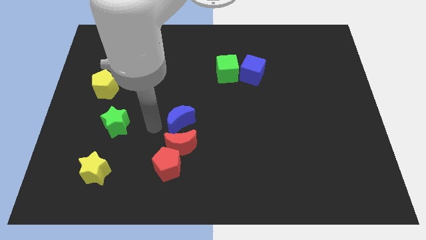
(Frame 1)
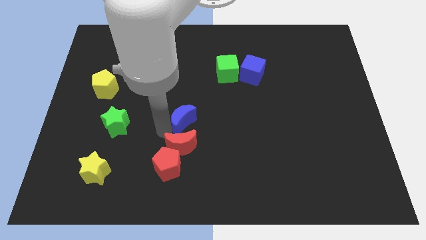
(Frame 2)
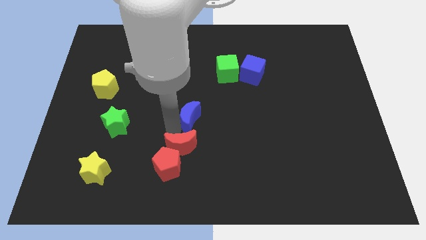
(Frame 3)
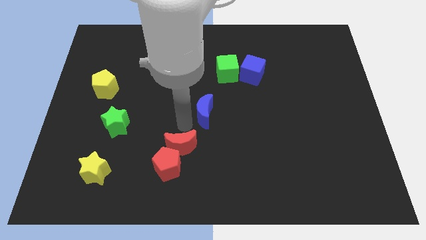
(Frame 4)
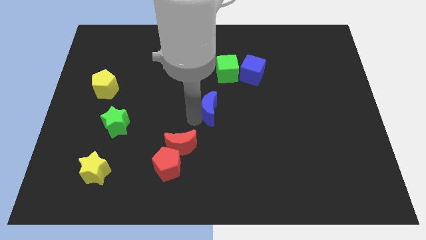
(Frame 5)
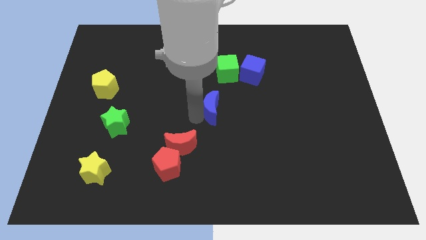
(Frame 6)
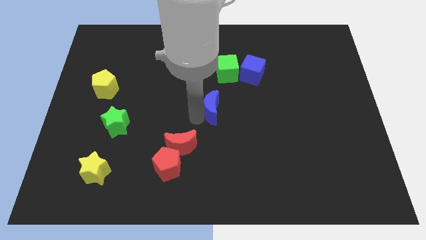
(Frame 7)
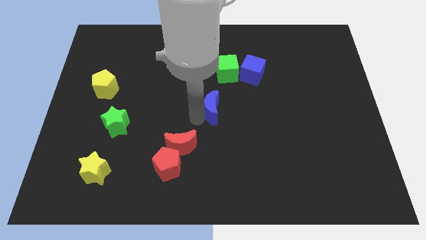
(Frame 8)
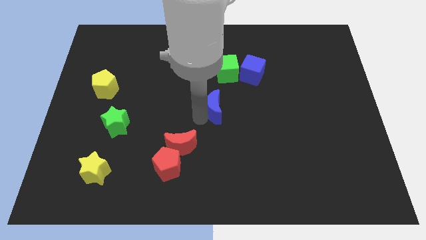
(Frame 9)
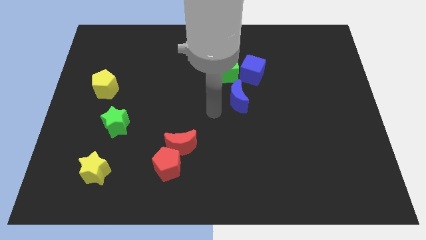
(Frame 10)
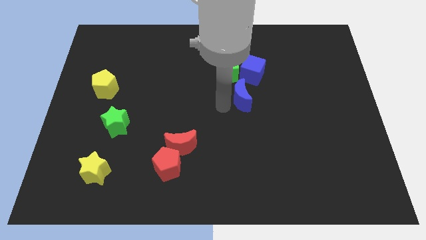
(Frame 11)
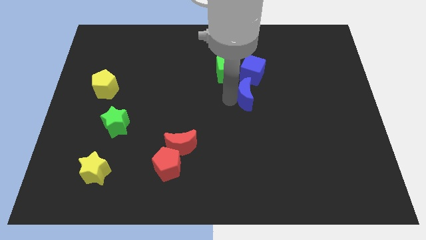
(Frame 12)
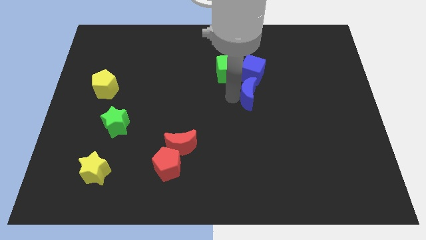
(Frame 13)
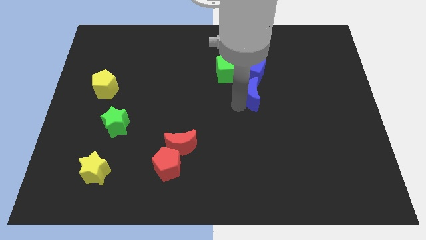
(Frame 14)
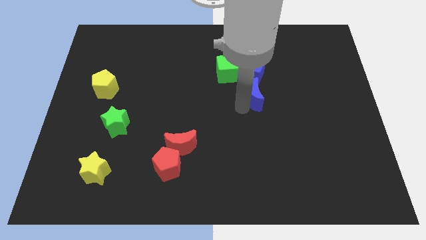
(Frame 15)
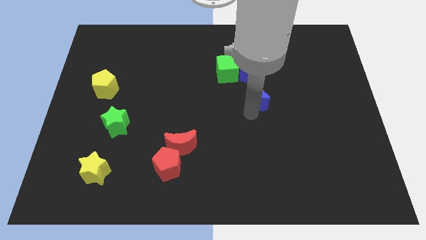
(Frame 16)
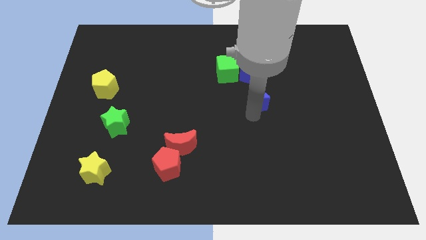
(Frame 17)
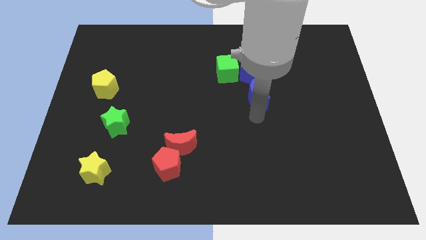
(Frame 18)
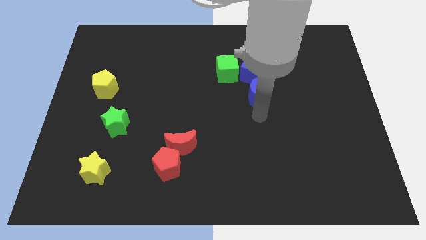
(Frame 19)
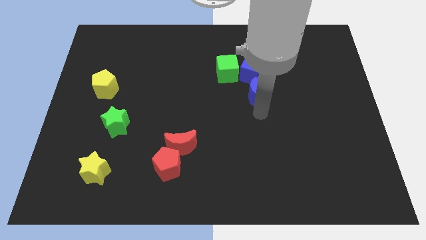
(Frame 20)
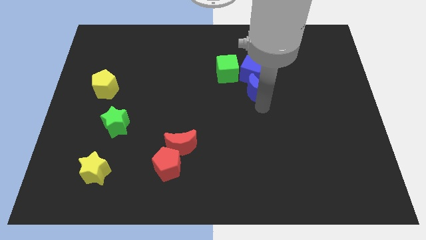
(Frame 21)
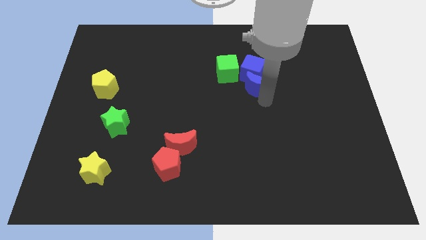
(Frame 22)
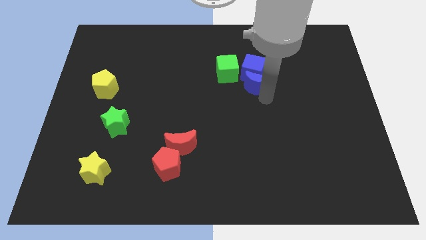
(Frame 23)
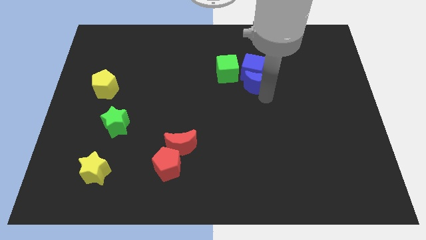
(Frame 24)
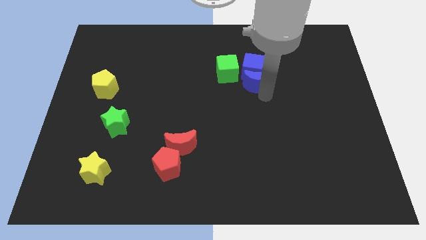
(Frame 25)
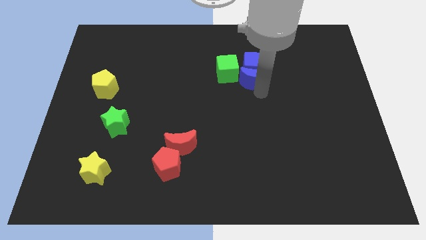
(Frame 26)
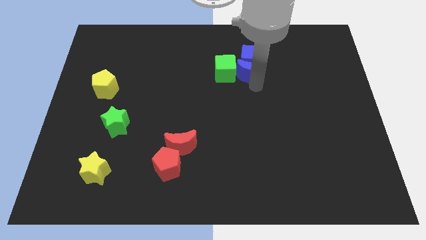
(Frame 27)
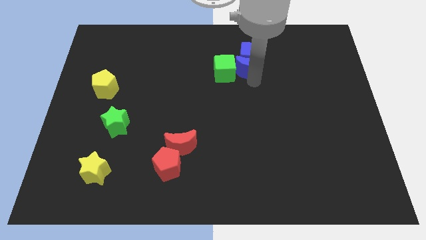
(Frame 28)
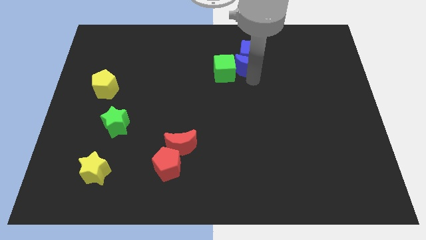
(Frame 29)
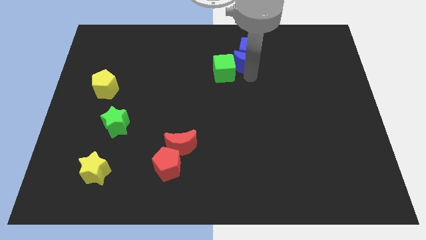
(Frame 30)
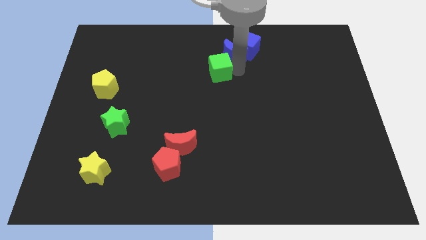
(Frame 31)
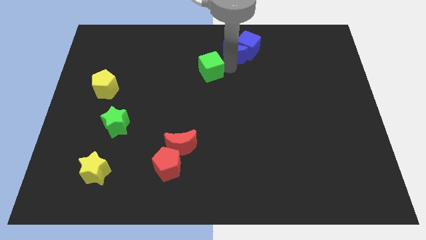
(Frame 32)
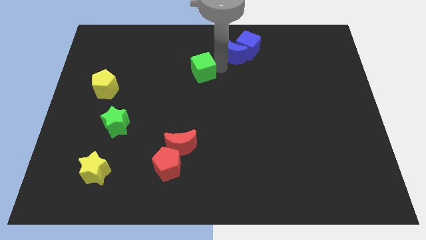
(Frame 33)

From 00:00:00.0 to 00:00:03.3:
push the blue blocks towards top center

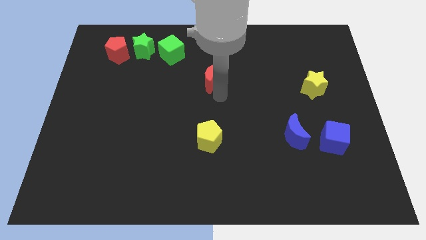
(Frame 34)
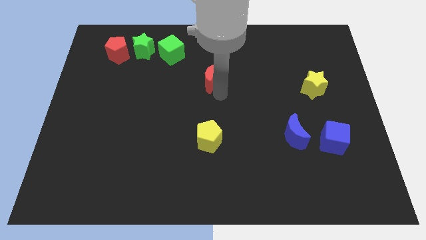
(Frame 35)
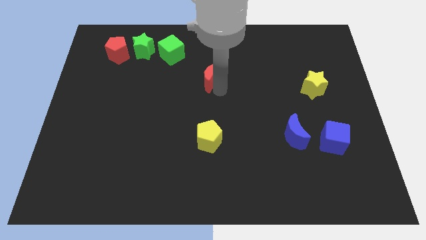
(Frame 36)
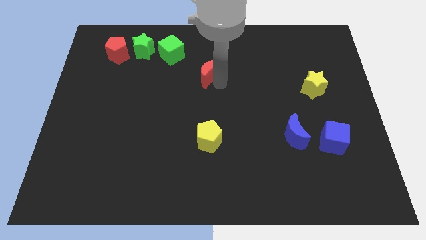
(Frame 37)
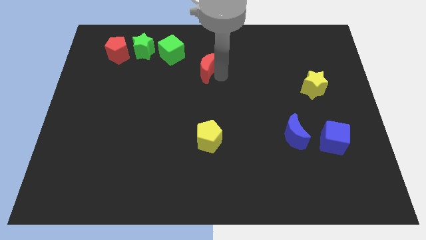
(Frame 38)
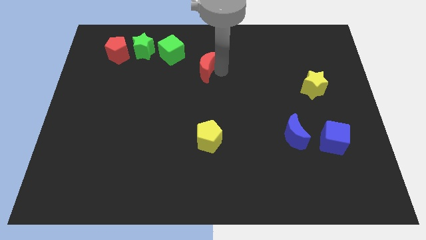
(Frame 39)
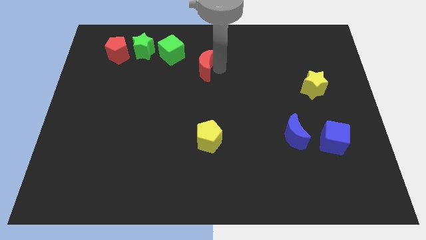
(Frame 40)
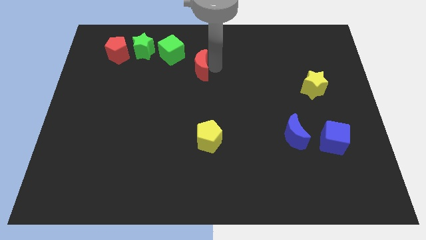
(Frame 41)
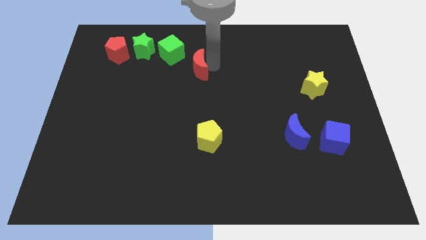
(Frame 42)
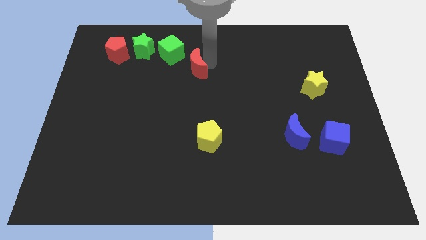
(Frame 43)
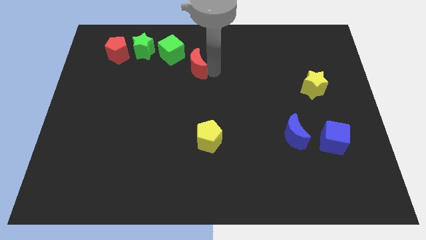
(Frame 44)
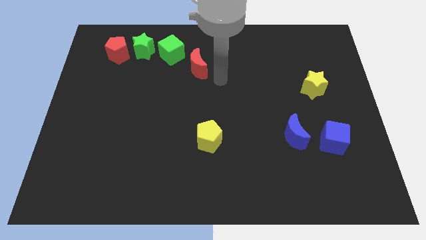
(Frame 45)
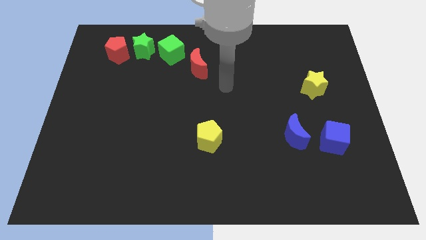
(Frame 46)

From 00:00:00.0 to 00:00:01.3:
place the red moon right to the green cube

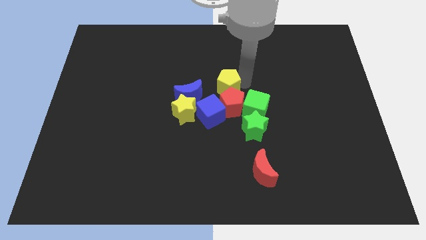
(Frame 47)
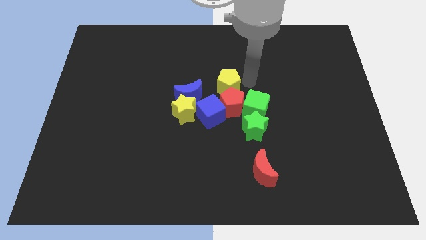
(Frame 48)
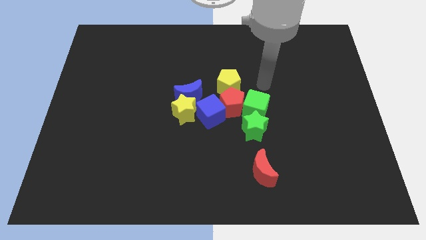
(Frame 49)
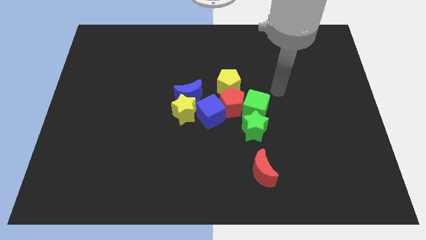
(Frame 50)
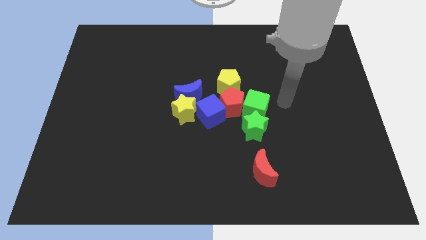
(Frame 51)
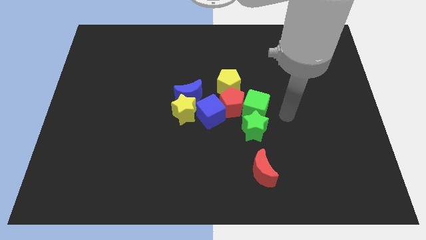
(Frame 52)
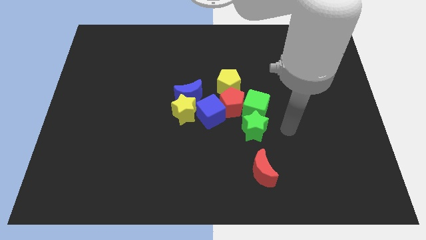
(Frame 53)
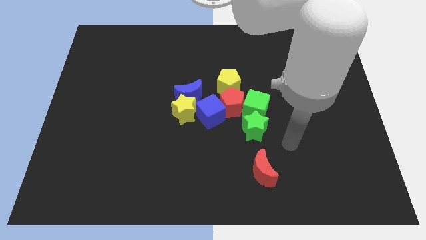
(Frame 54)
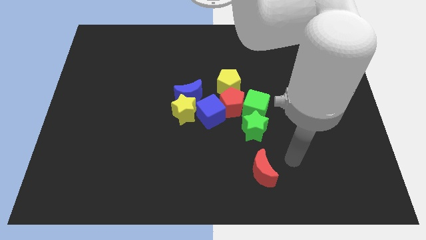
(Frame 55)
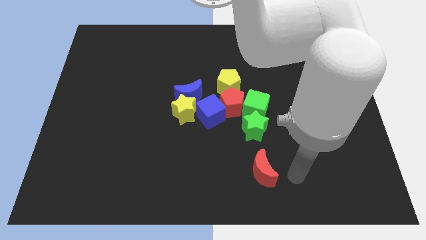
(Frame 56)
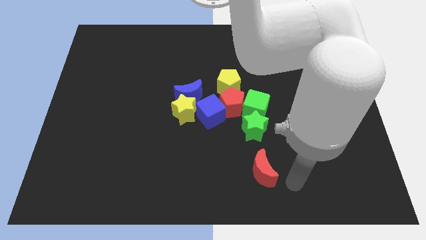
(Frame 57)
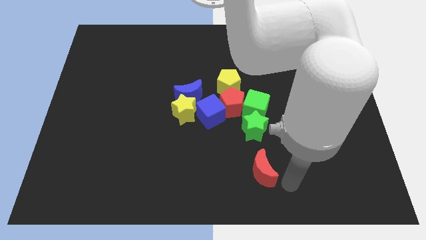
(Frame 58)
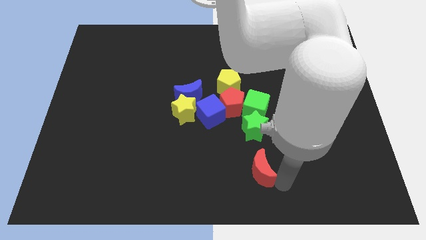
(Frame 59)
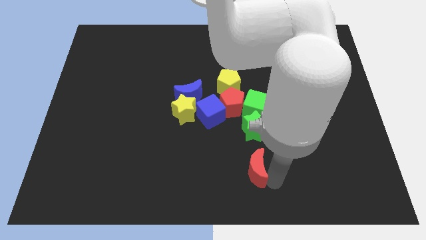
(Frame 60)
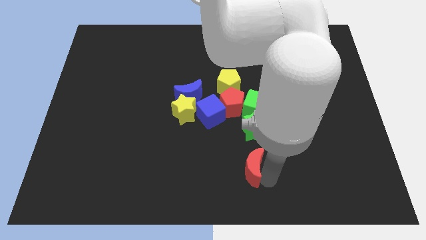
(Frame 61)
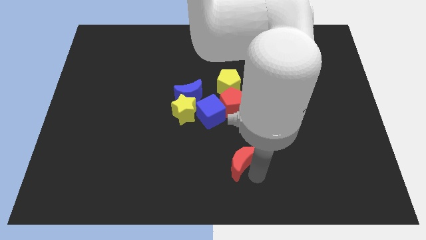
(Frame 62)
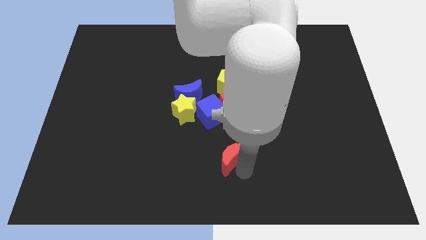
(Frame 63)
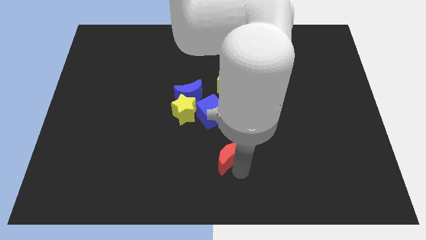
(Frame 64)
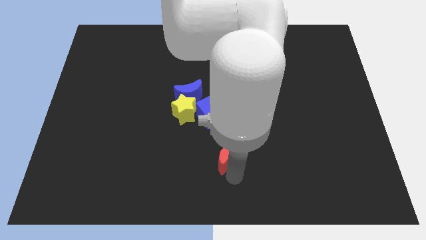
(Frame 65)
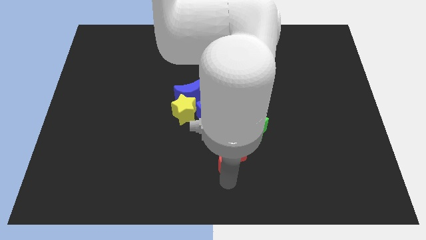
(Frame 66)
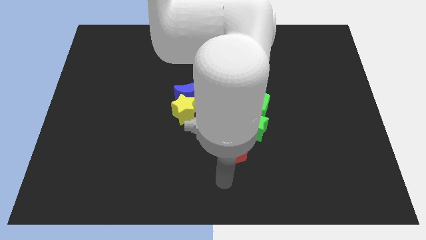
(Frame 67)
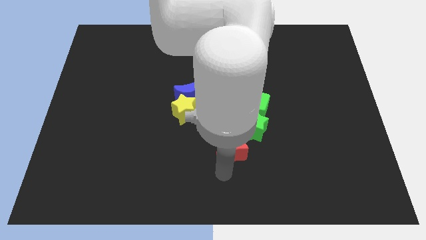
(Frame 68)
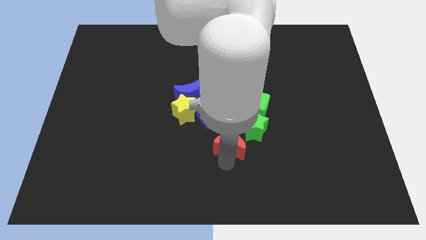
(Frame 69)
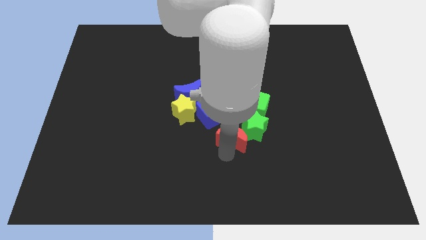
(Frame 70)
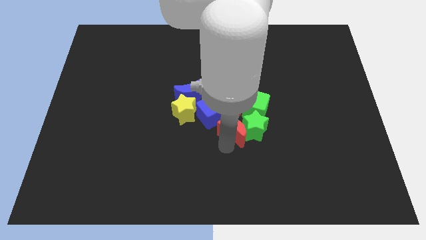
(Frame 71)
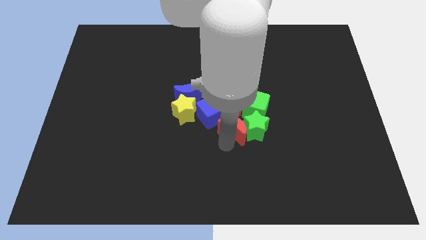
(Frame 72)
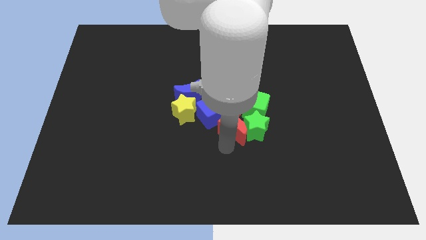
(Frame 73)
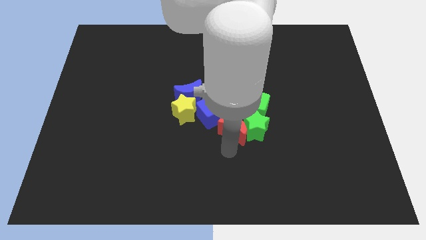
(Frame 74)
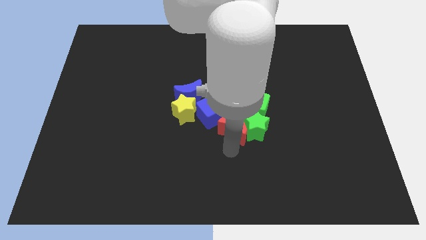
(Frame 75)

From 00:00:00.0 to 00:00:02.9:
push the red moon into the group of blocks

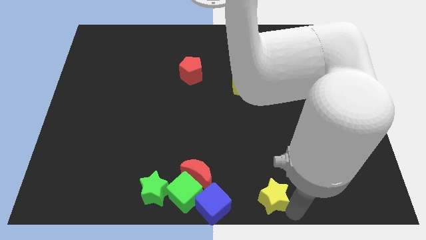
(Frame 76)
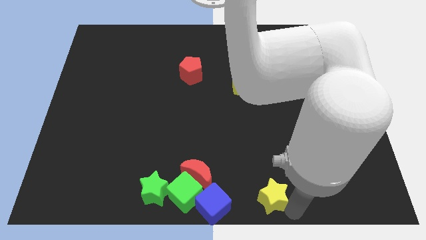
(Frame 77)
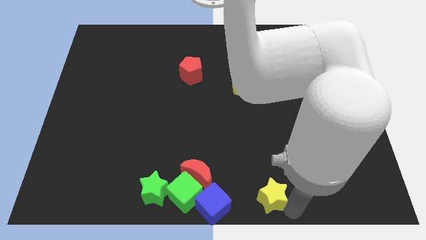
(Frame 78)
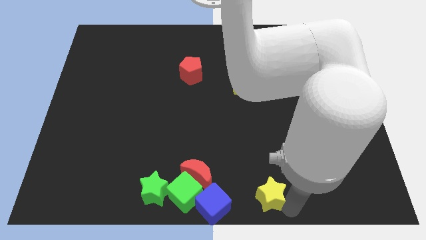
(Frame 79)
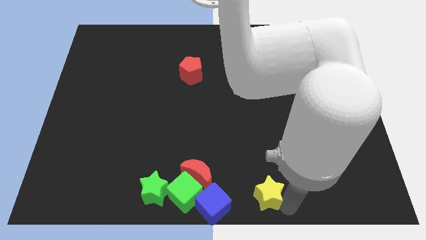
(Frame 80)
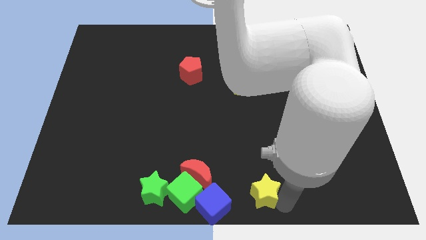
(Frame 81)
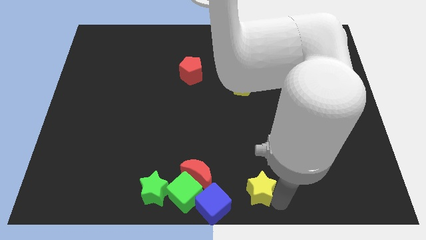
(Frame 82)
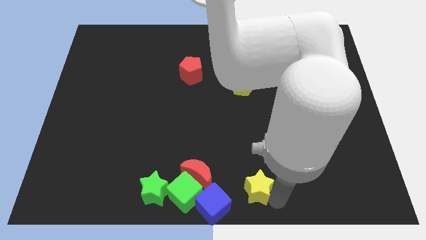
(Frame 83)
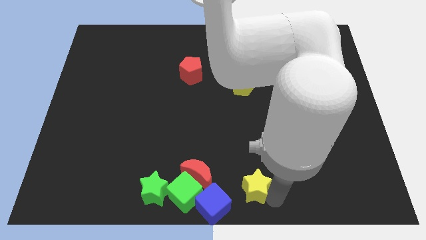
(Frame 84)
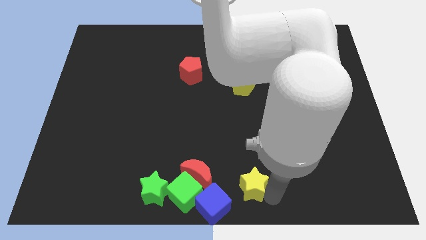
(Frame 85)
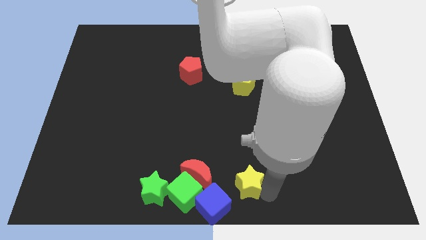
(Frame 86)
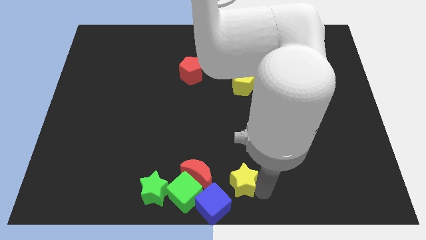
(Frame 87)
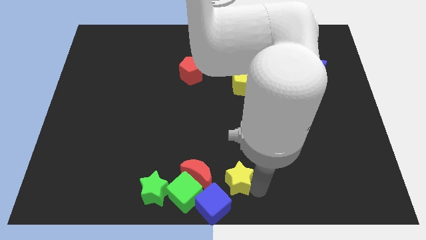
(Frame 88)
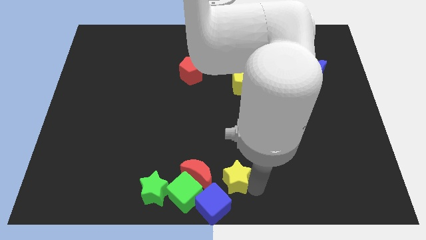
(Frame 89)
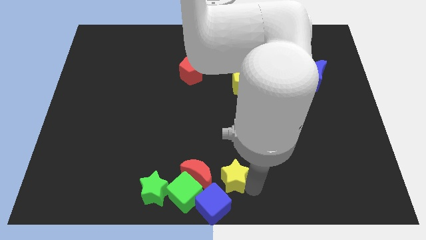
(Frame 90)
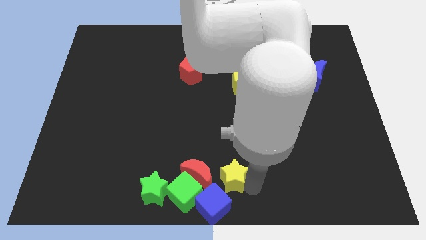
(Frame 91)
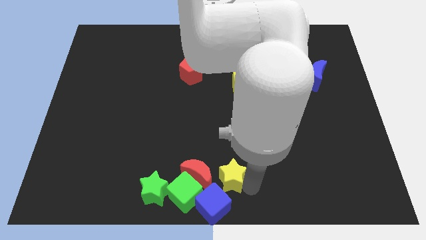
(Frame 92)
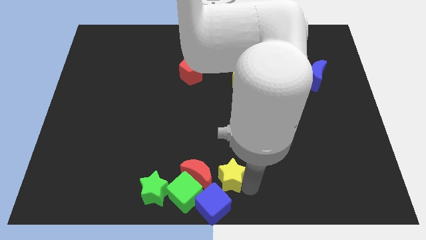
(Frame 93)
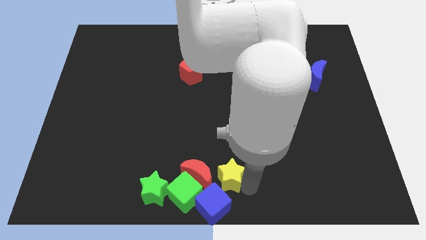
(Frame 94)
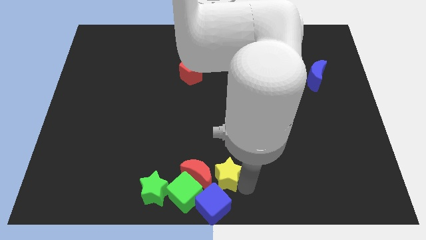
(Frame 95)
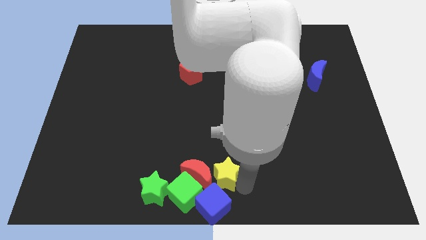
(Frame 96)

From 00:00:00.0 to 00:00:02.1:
push the yellow star close to the red crescent
